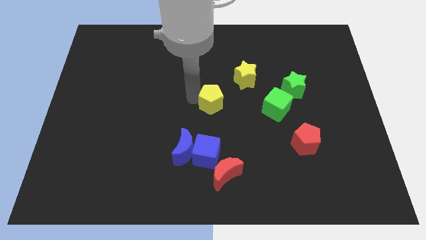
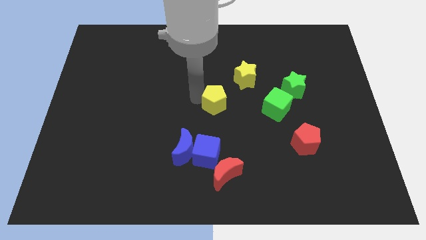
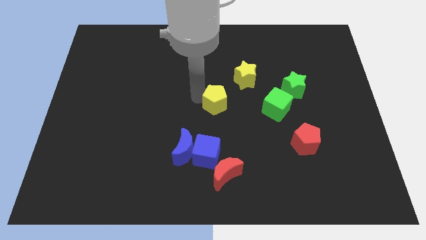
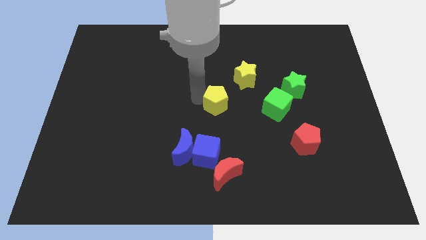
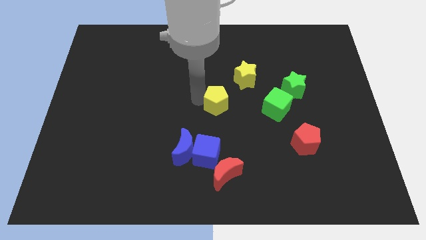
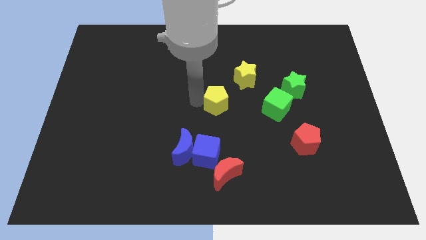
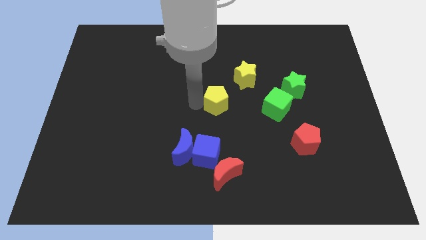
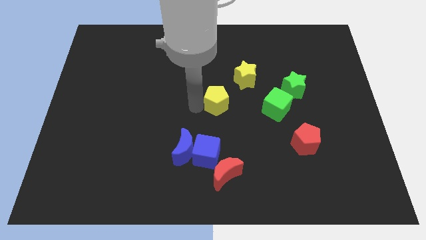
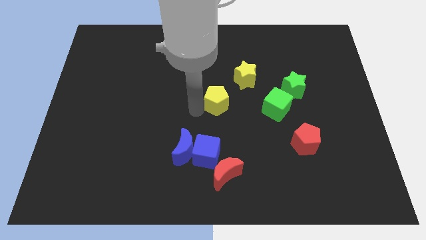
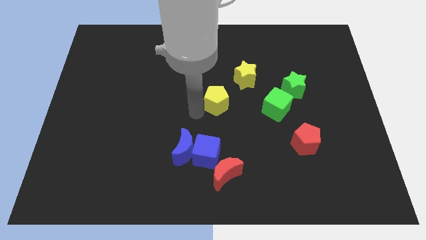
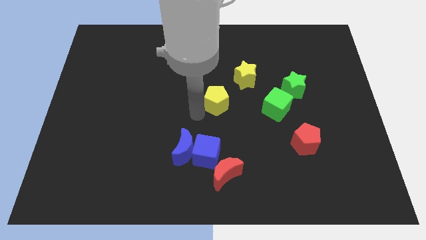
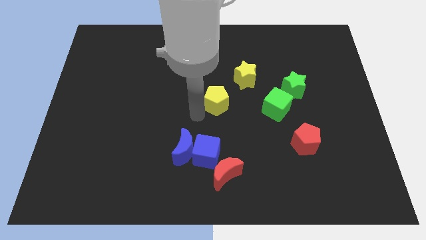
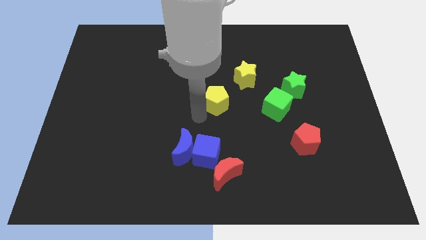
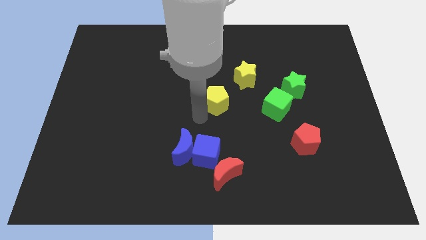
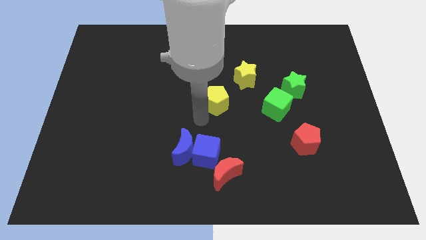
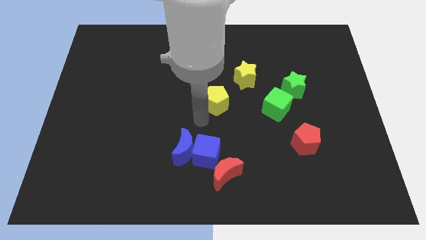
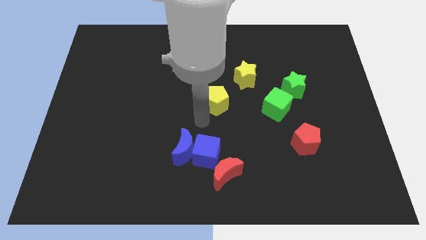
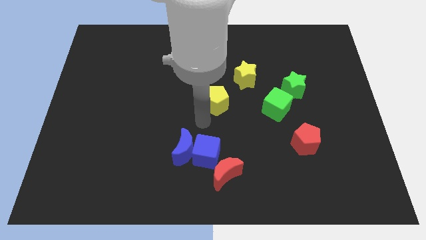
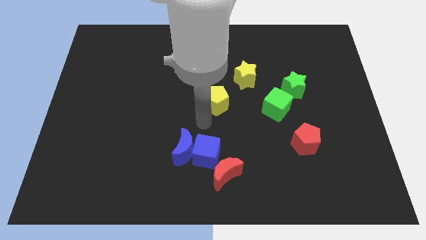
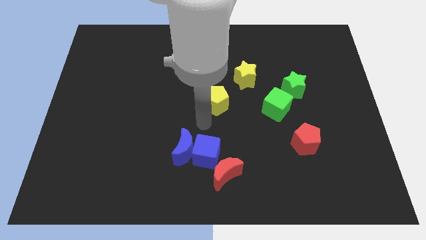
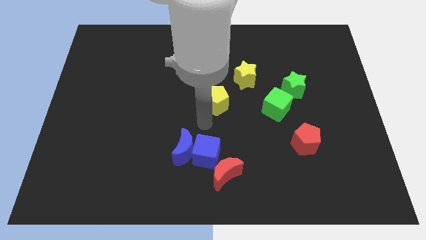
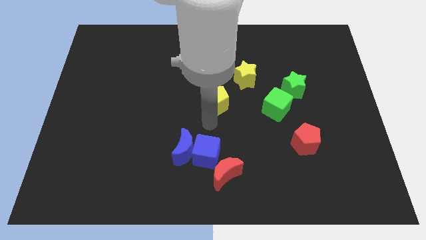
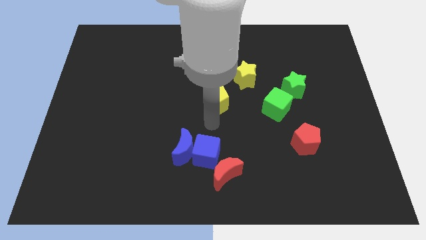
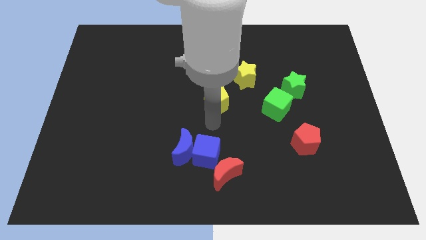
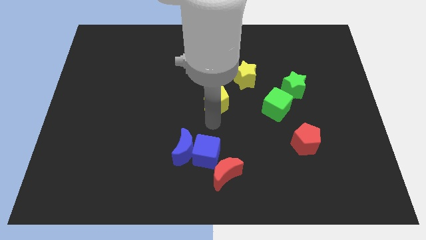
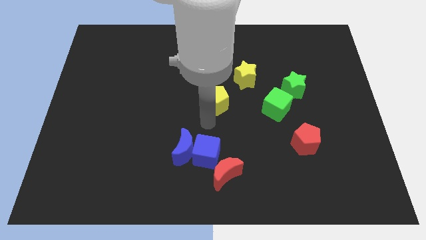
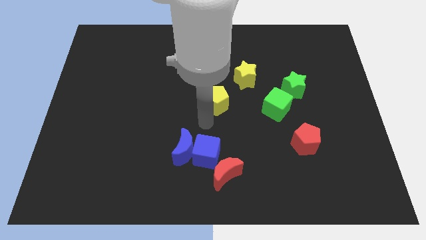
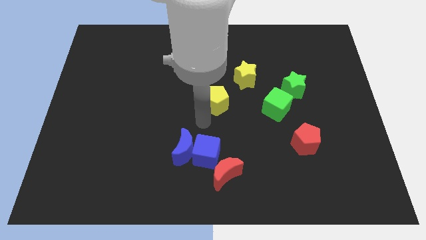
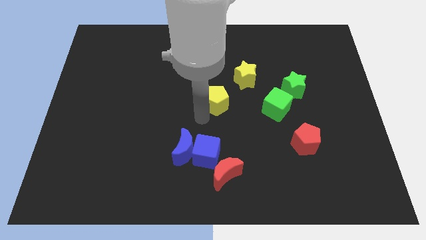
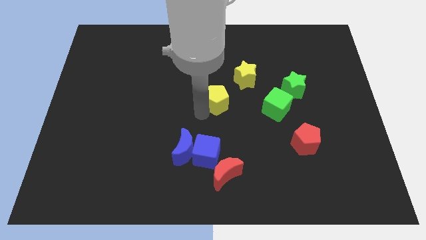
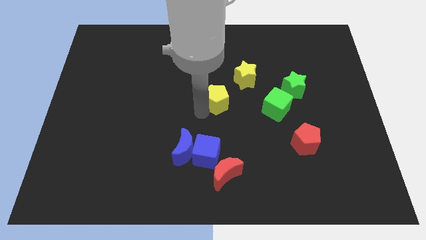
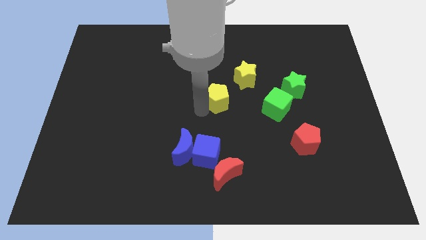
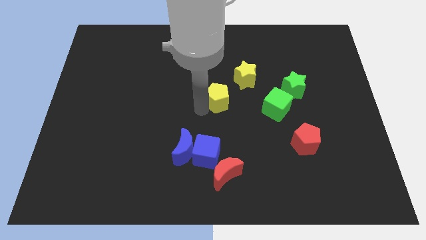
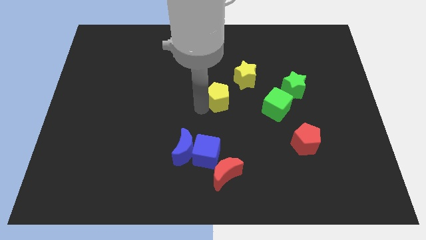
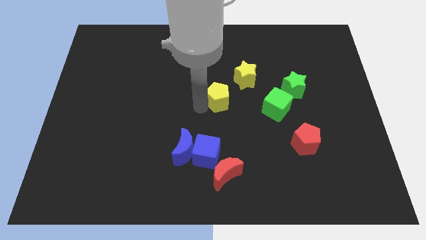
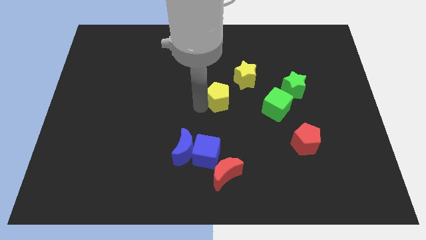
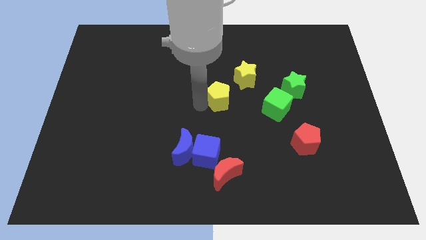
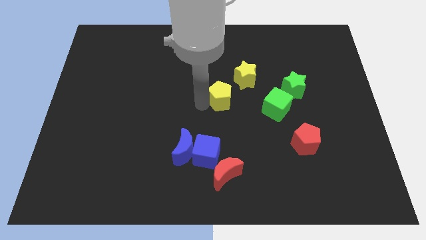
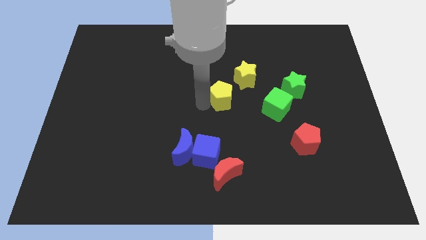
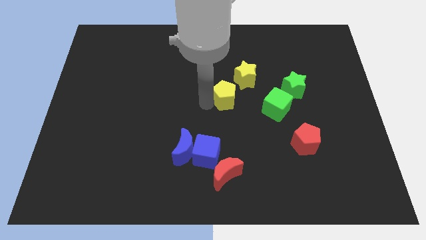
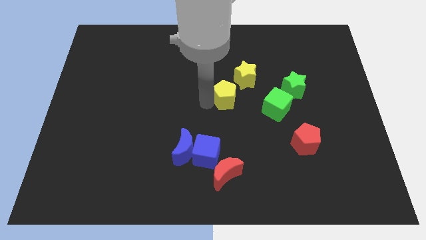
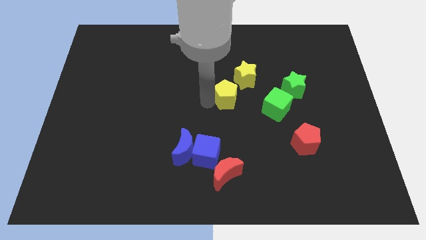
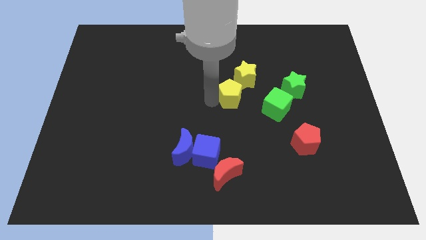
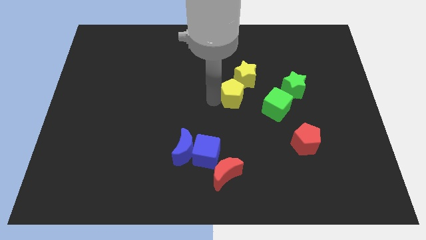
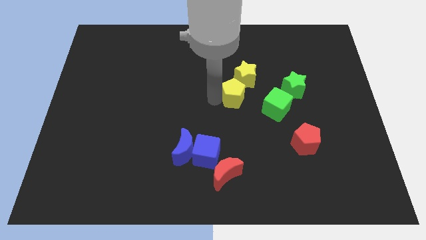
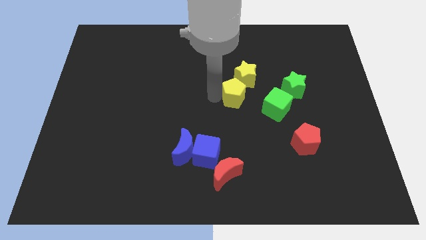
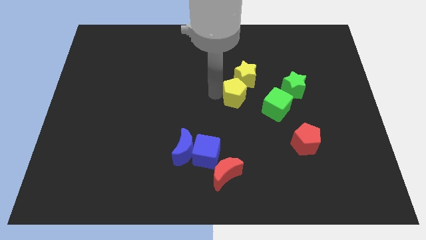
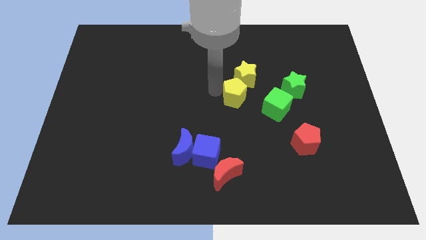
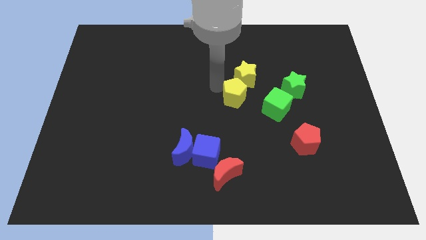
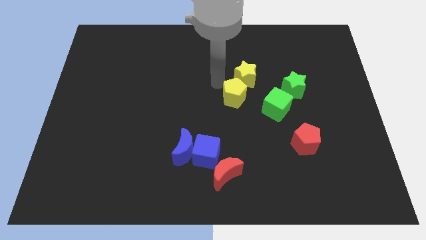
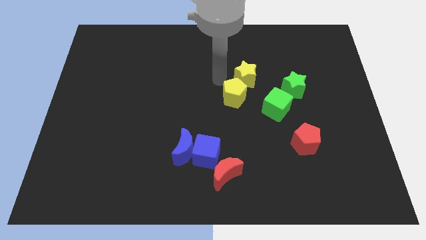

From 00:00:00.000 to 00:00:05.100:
move yellow pentagon towards yellow star

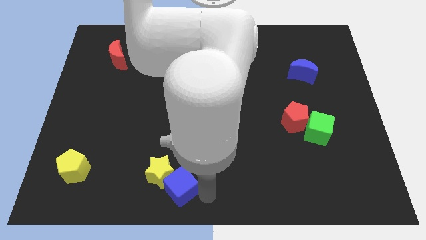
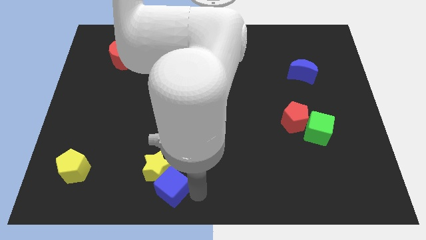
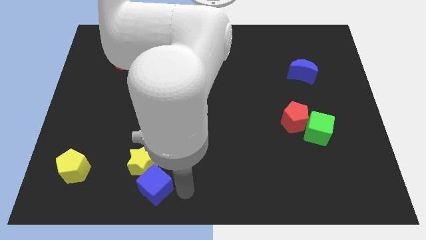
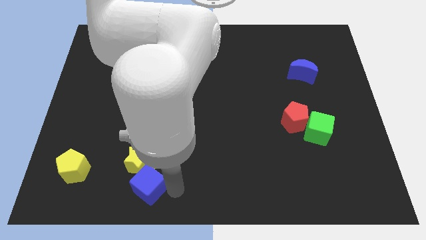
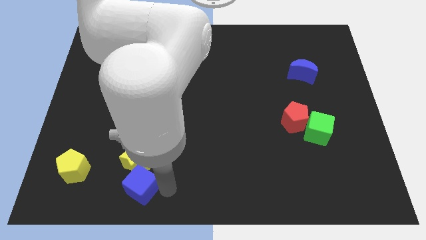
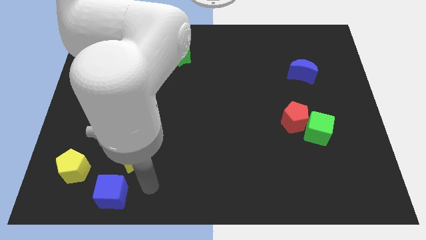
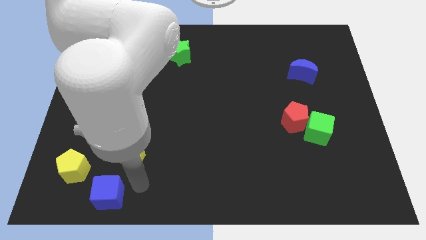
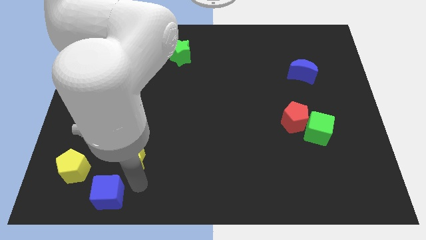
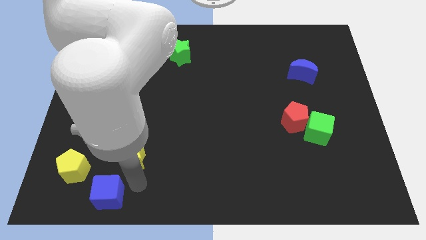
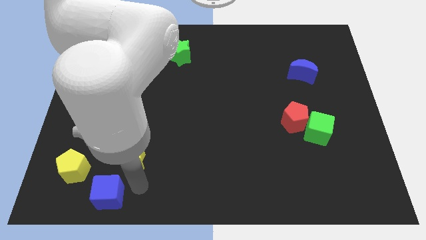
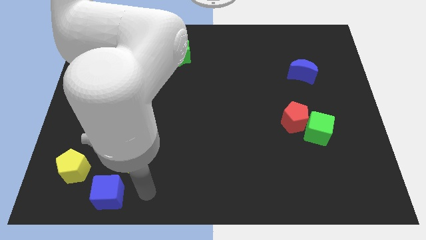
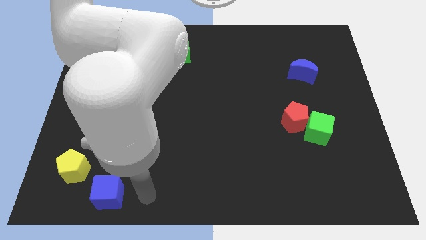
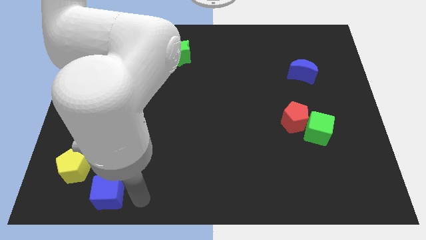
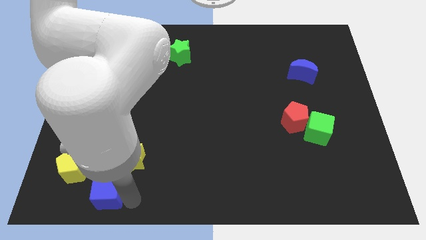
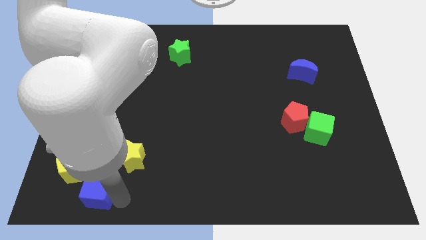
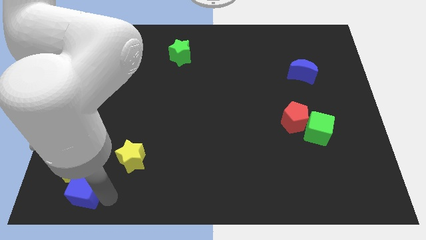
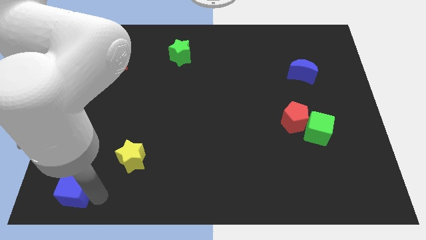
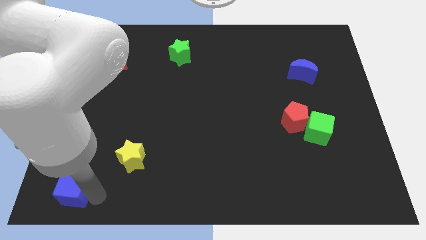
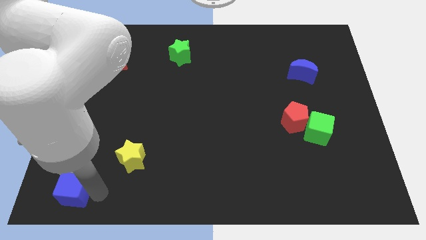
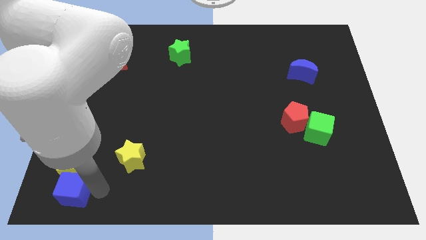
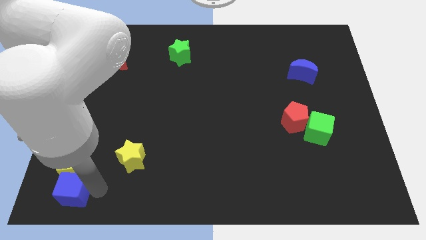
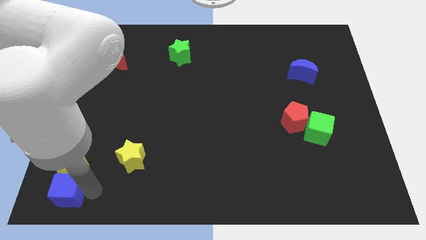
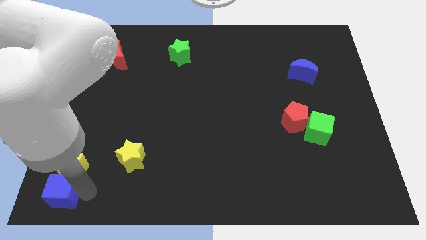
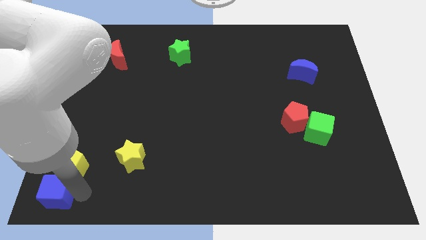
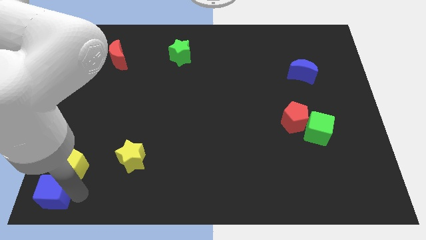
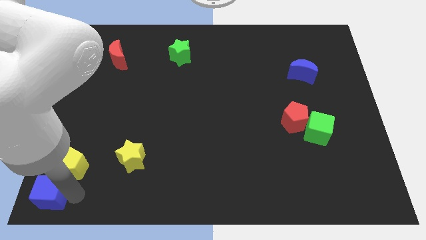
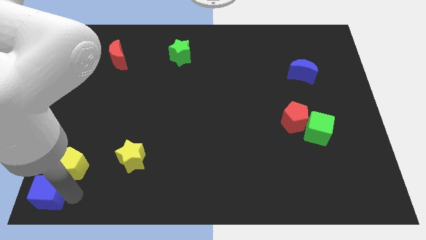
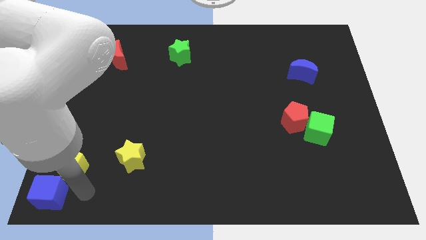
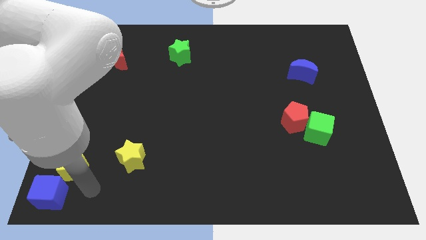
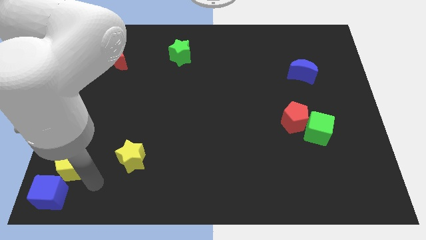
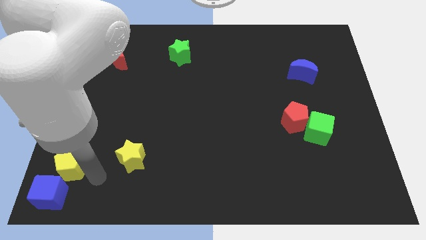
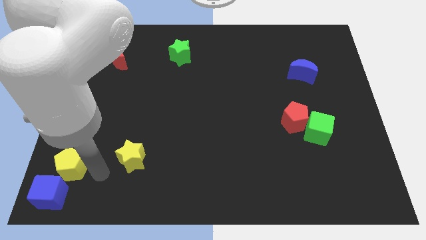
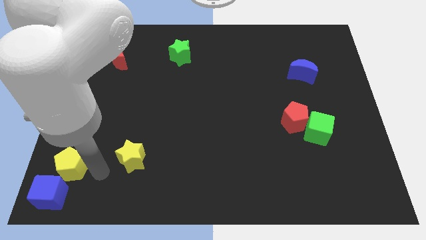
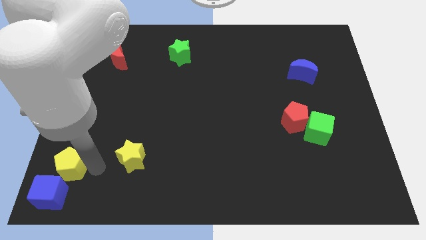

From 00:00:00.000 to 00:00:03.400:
push the blue cube to the bottom left corner of the board

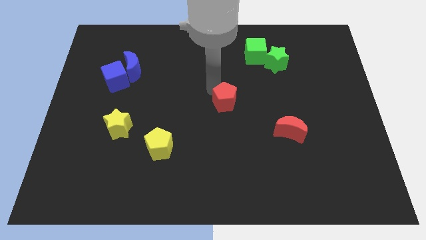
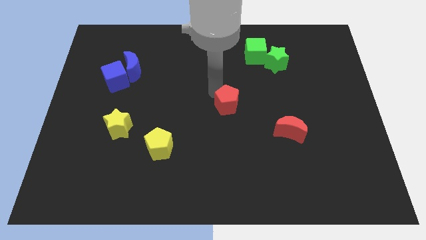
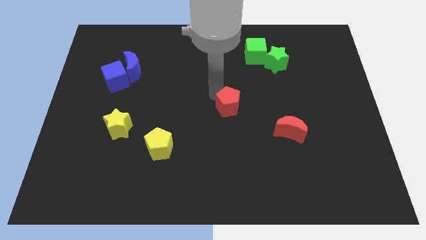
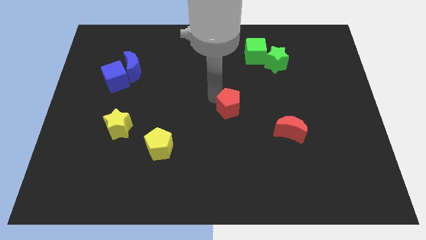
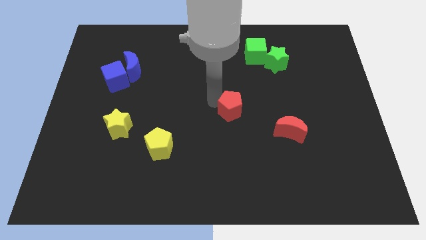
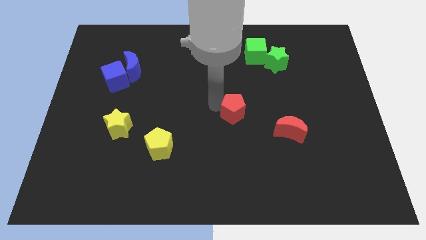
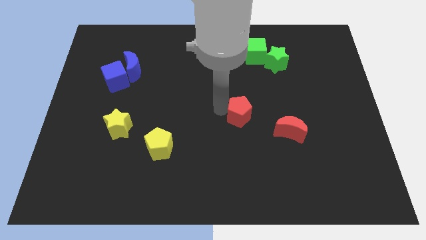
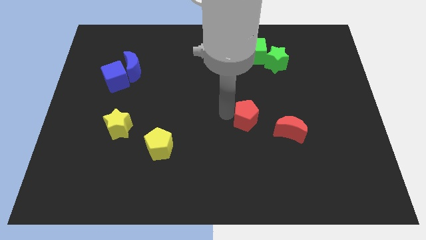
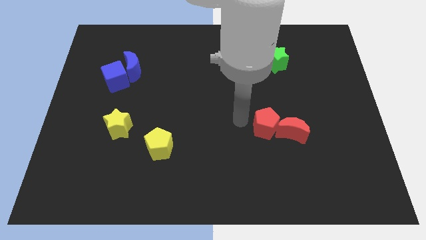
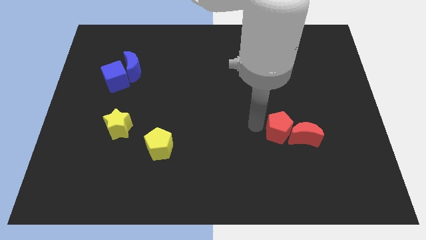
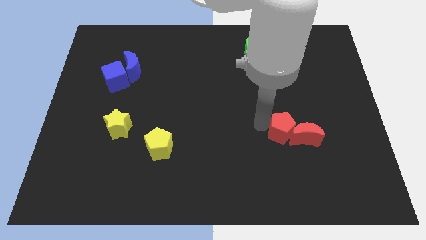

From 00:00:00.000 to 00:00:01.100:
push the red pentagon into the red moon
